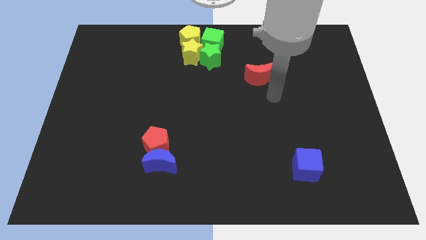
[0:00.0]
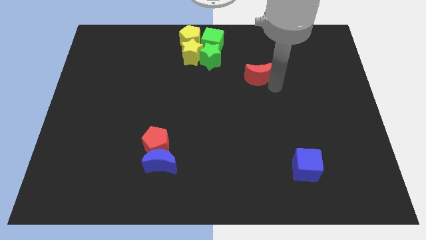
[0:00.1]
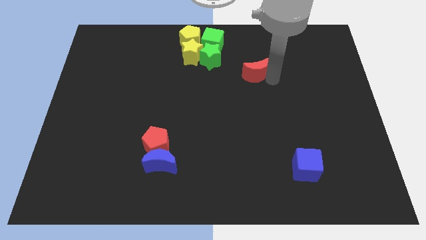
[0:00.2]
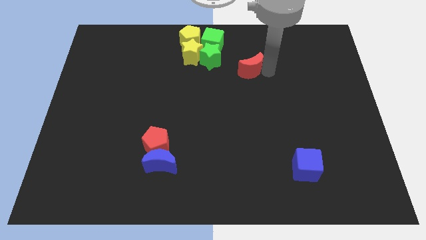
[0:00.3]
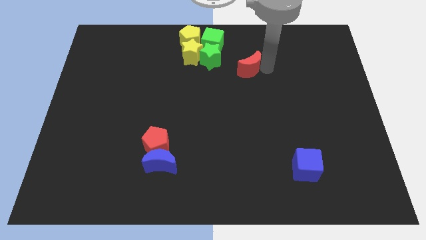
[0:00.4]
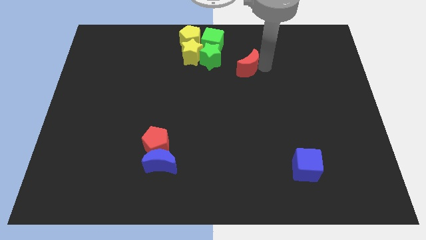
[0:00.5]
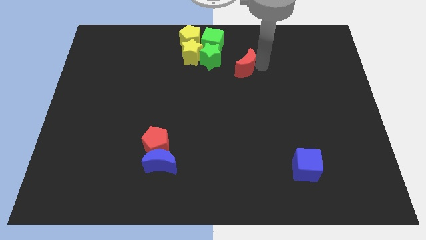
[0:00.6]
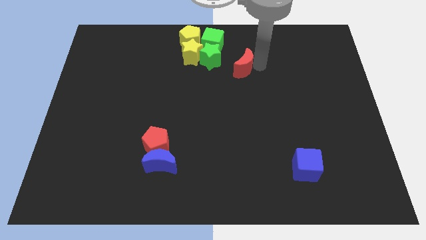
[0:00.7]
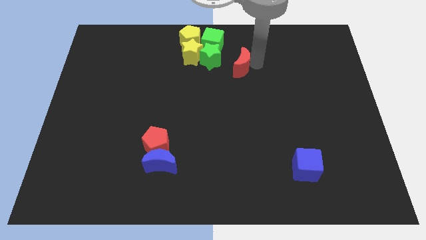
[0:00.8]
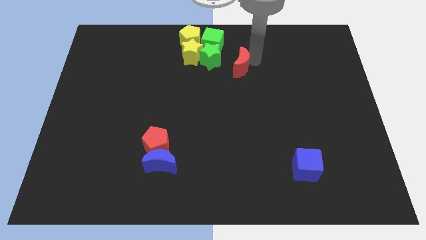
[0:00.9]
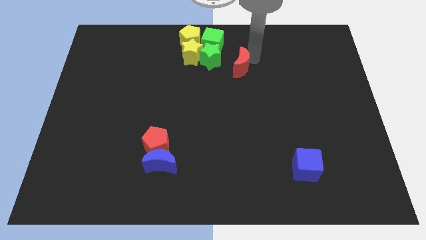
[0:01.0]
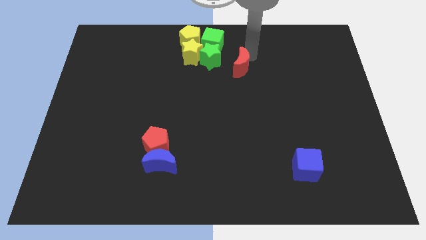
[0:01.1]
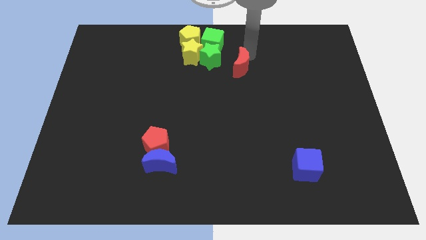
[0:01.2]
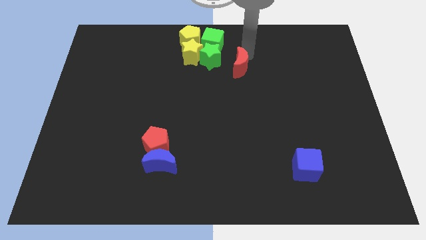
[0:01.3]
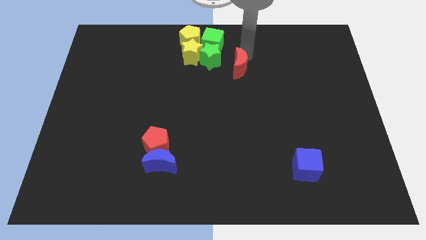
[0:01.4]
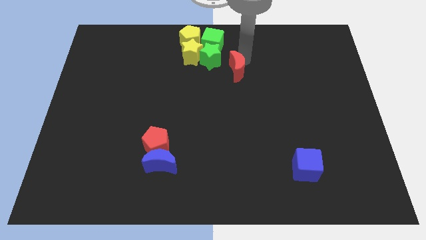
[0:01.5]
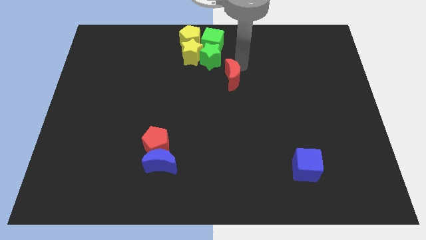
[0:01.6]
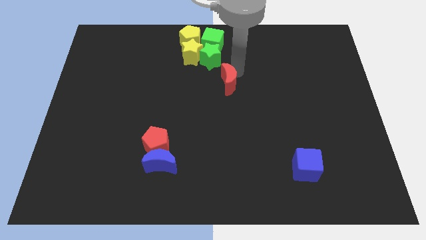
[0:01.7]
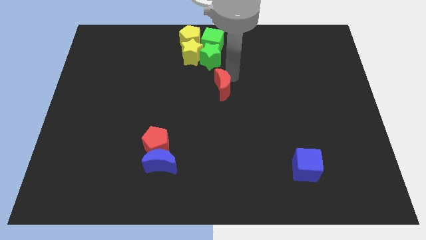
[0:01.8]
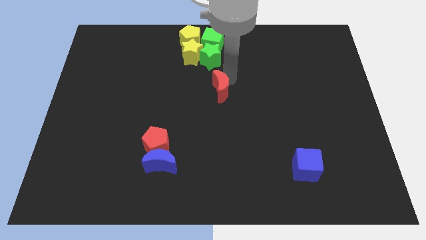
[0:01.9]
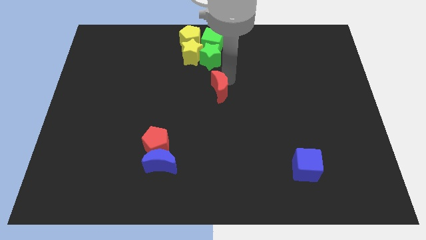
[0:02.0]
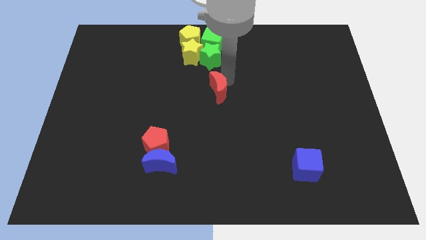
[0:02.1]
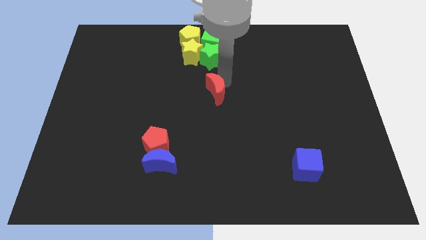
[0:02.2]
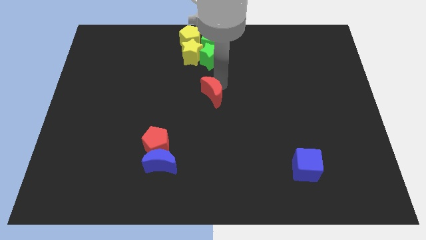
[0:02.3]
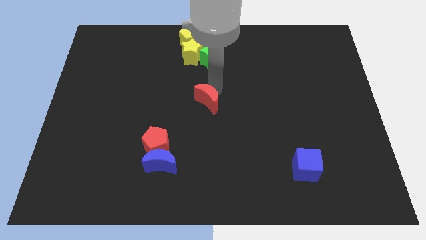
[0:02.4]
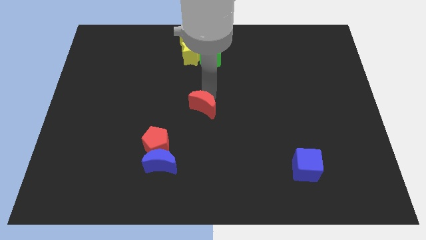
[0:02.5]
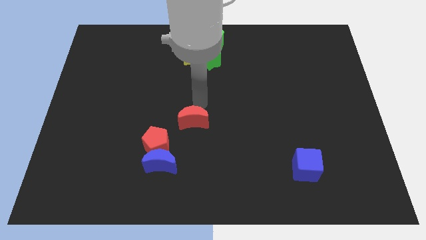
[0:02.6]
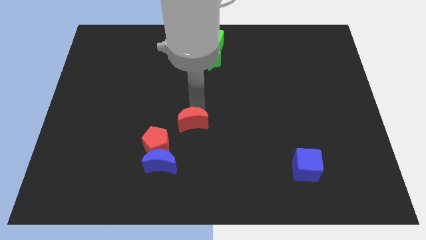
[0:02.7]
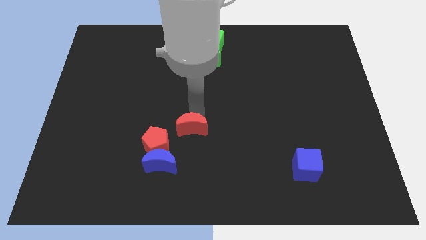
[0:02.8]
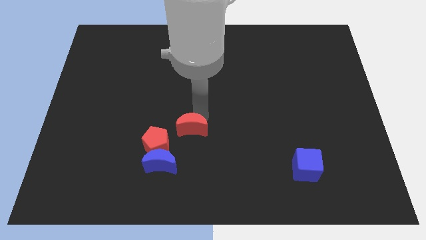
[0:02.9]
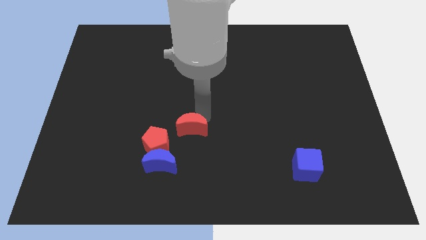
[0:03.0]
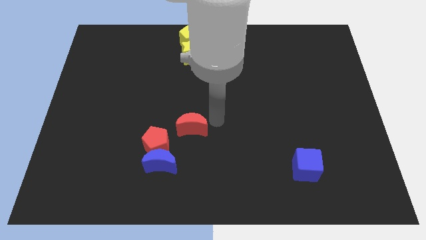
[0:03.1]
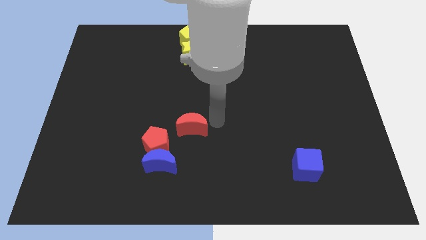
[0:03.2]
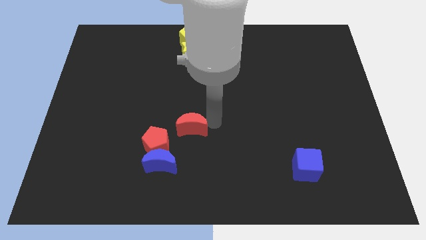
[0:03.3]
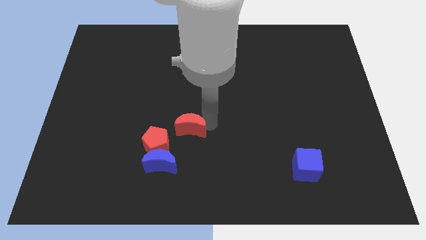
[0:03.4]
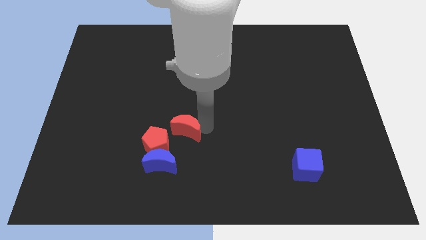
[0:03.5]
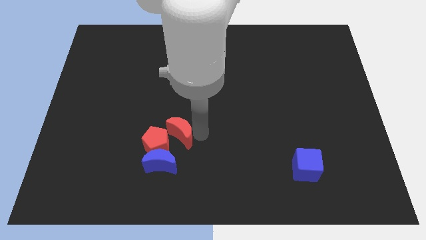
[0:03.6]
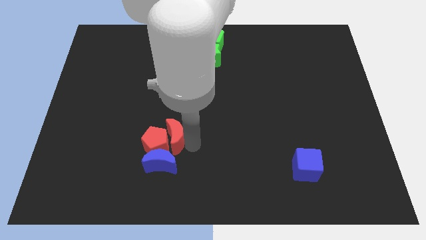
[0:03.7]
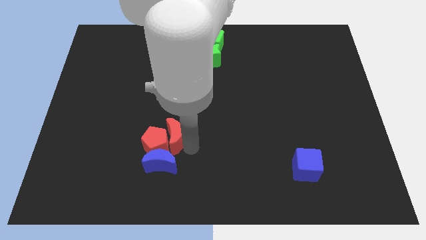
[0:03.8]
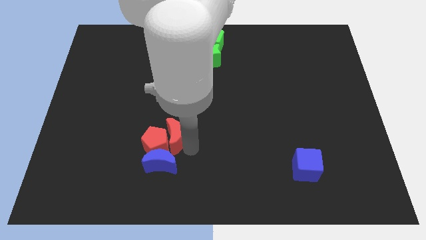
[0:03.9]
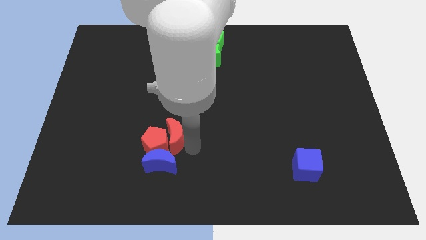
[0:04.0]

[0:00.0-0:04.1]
push red moon to the right of red pentagon

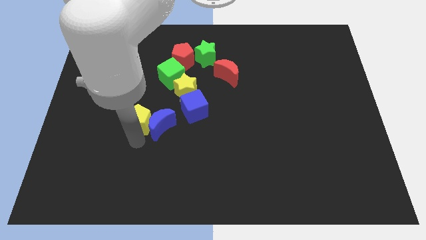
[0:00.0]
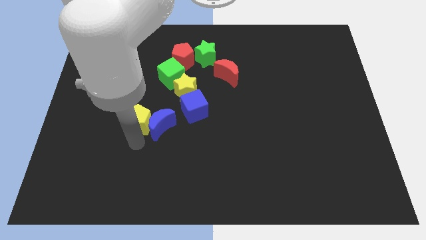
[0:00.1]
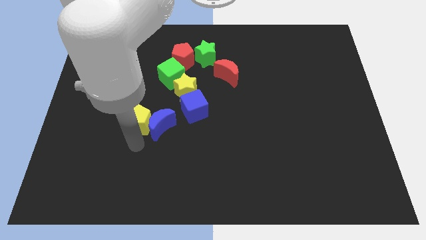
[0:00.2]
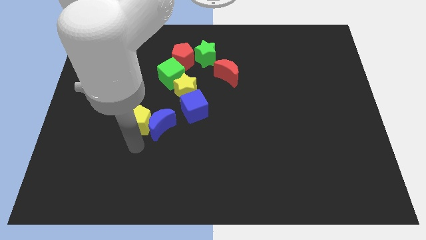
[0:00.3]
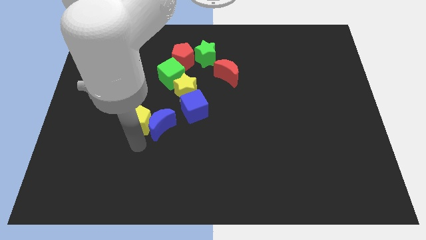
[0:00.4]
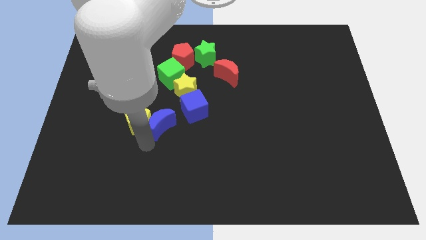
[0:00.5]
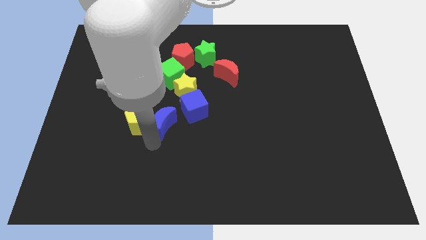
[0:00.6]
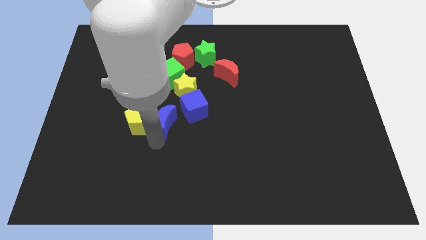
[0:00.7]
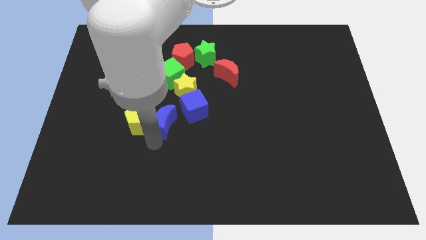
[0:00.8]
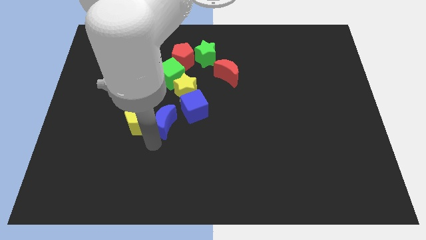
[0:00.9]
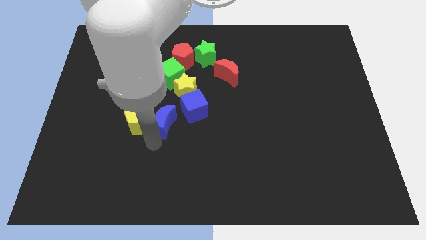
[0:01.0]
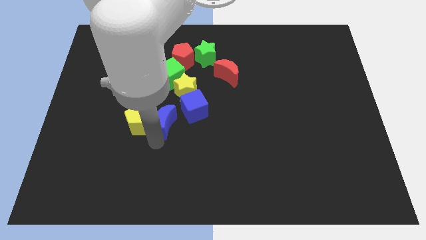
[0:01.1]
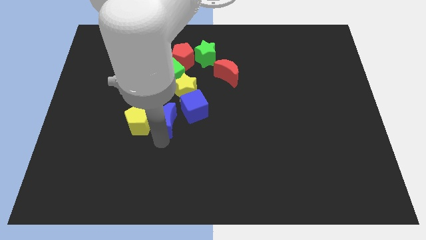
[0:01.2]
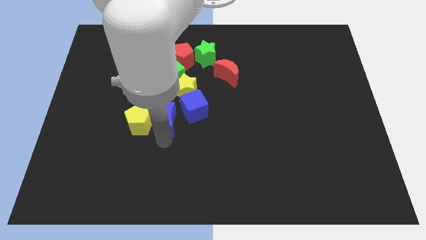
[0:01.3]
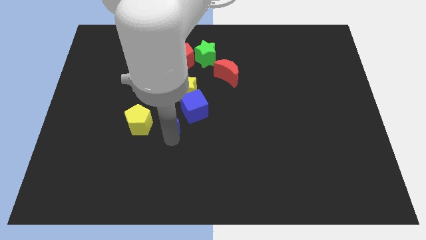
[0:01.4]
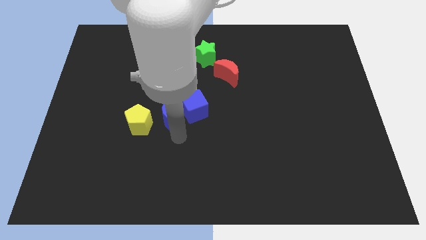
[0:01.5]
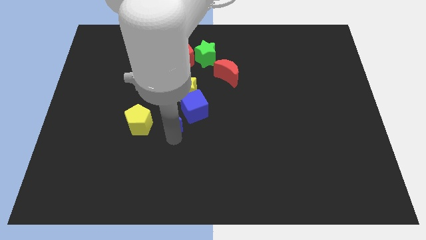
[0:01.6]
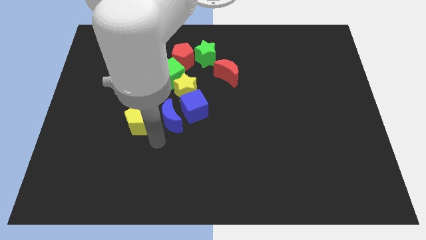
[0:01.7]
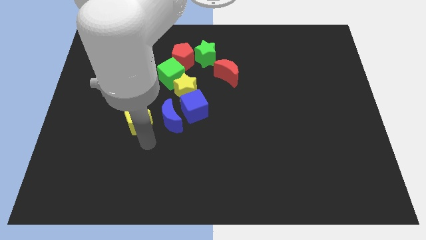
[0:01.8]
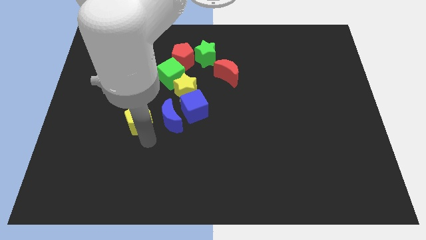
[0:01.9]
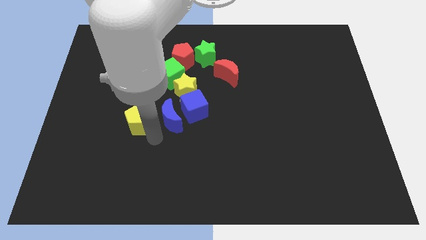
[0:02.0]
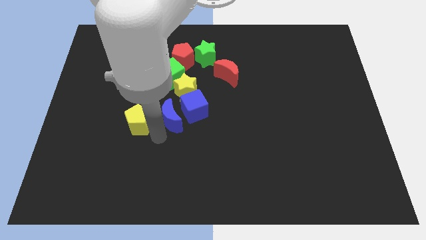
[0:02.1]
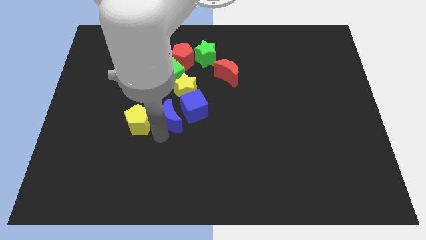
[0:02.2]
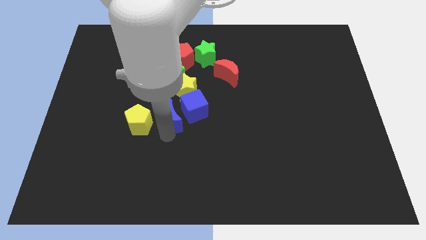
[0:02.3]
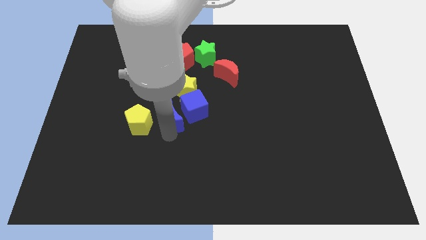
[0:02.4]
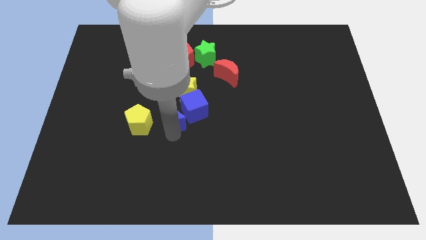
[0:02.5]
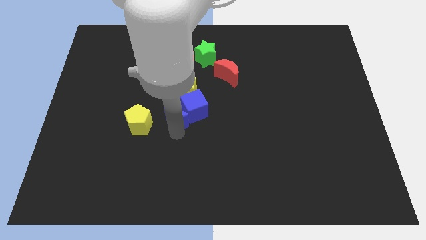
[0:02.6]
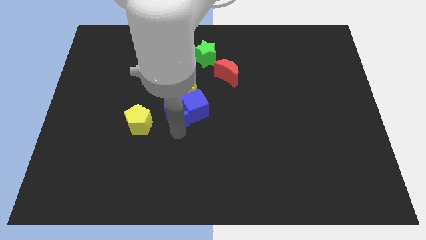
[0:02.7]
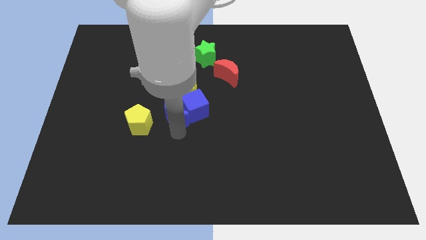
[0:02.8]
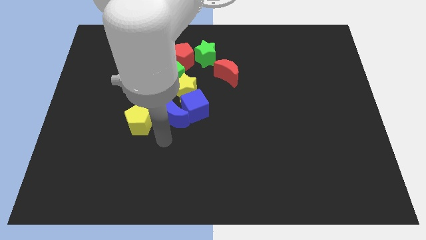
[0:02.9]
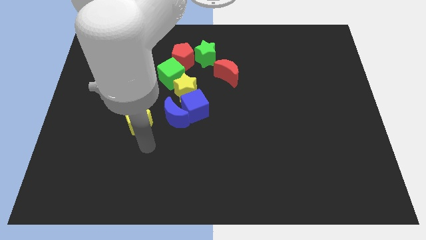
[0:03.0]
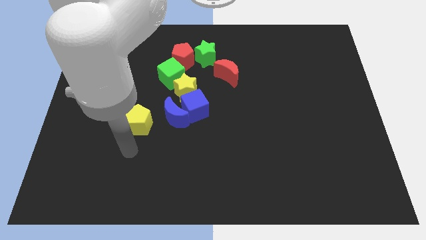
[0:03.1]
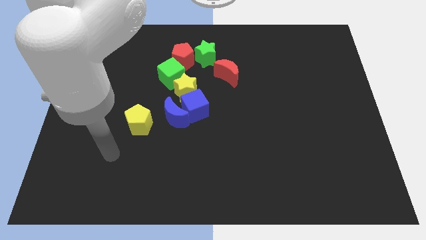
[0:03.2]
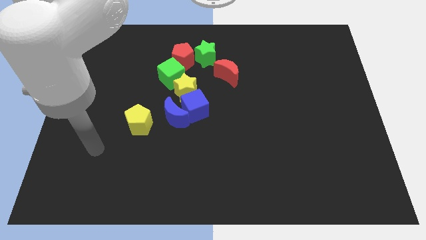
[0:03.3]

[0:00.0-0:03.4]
separate yellow pentagon and blue moon

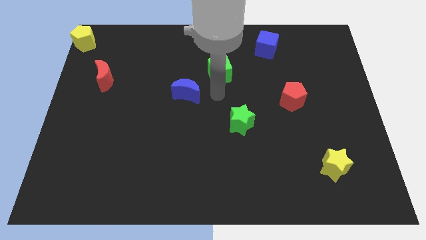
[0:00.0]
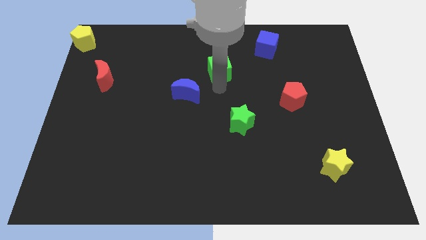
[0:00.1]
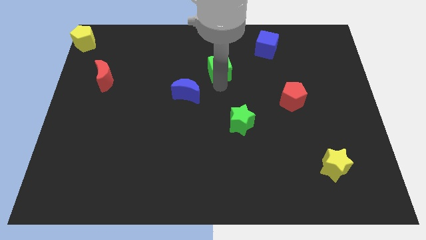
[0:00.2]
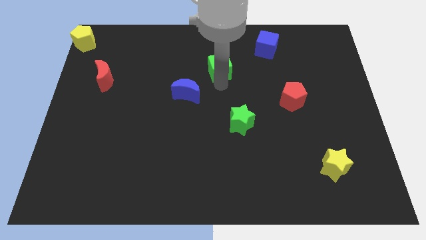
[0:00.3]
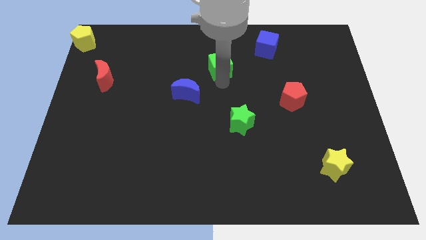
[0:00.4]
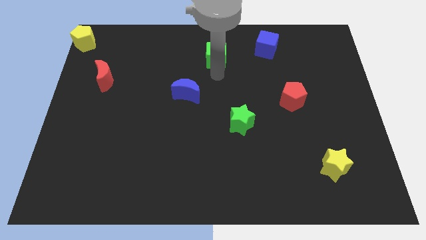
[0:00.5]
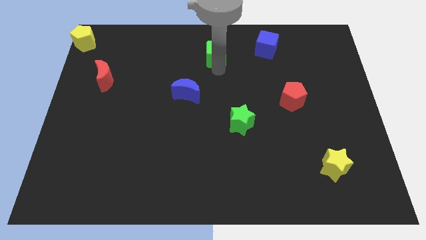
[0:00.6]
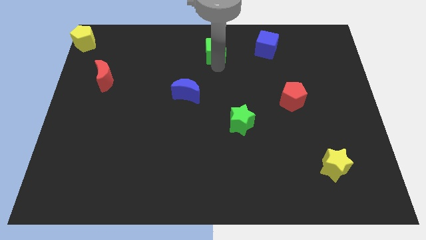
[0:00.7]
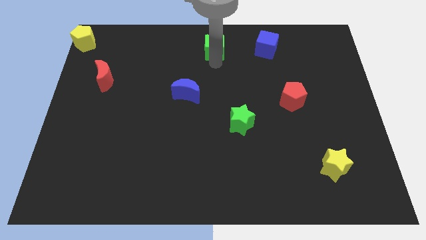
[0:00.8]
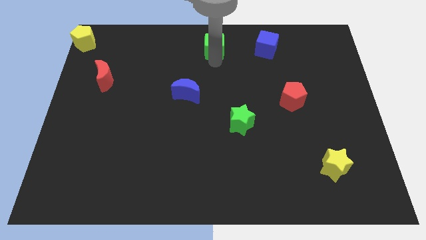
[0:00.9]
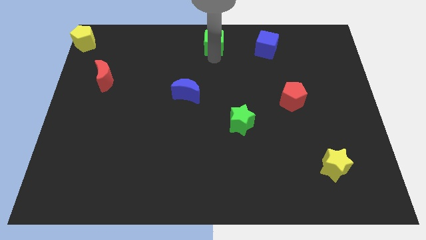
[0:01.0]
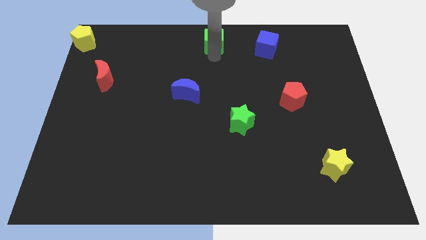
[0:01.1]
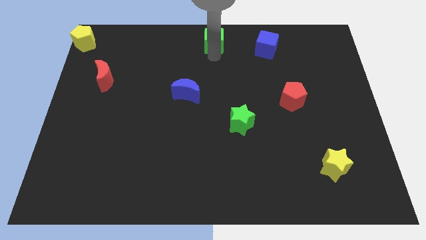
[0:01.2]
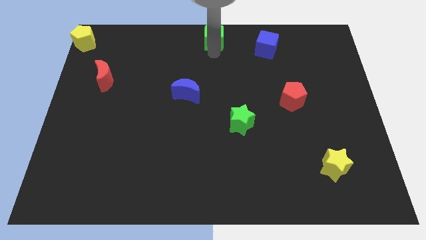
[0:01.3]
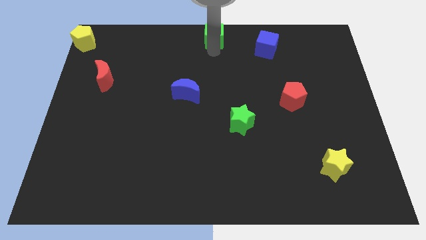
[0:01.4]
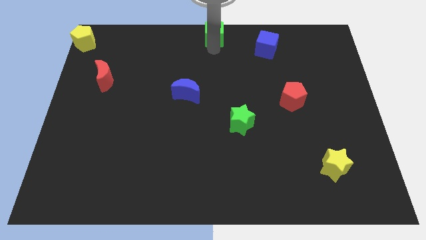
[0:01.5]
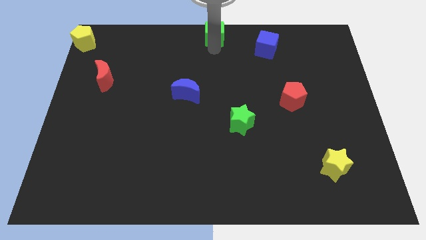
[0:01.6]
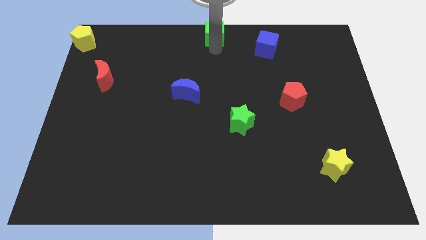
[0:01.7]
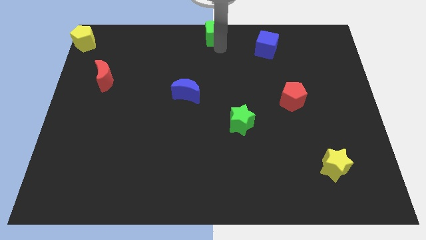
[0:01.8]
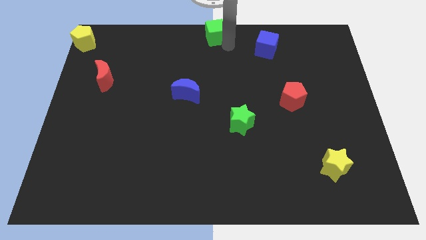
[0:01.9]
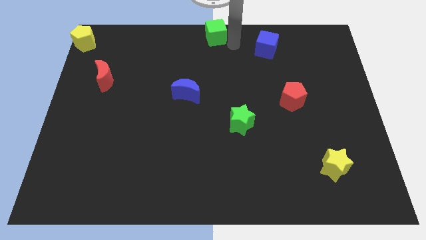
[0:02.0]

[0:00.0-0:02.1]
put the green cube diagonally top left to the blue cube
